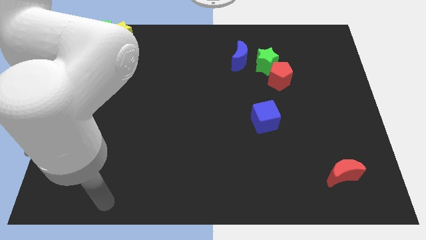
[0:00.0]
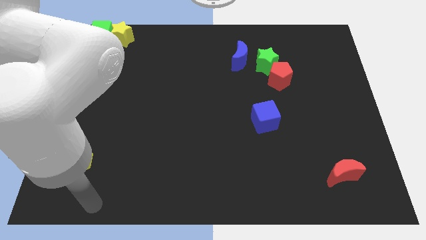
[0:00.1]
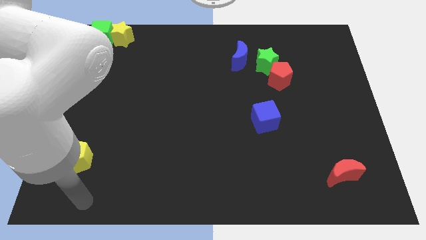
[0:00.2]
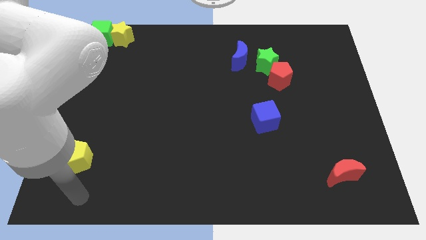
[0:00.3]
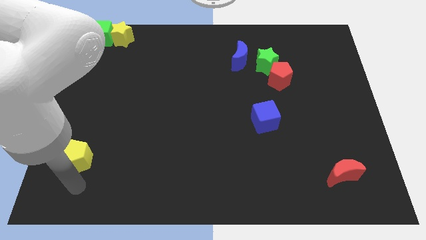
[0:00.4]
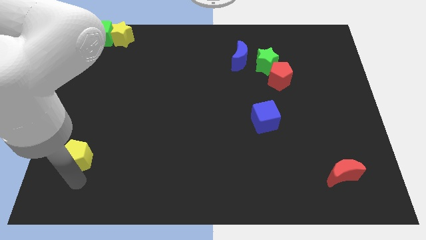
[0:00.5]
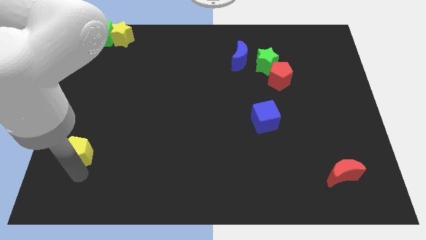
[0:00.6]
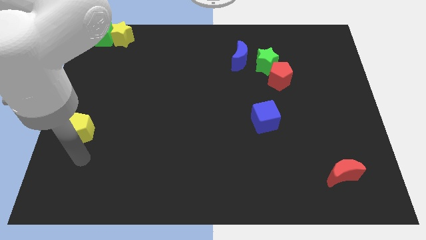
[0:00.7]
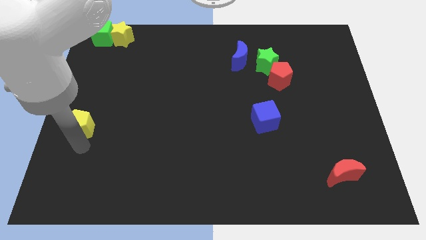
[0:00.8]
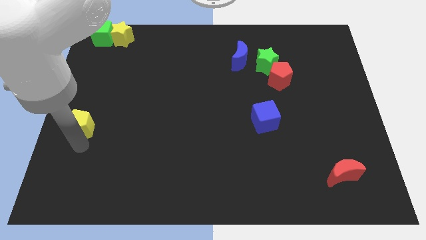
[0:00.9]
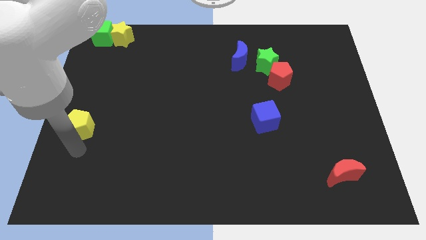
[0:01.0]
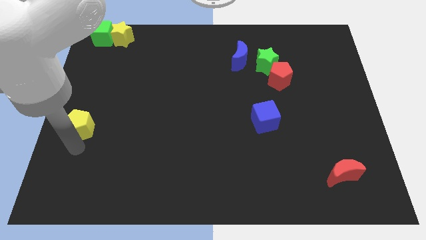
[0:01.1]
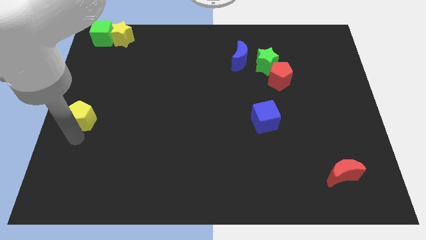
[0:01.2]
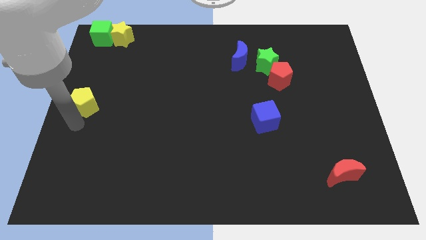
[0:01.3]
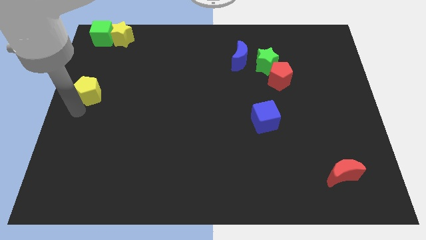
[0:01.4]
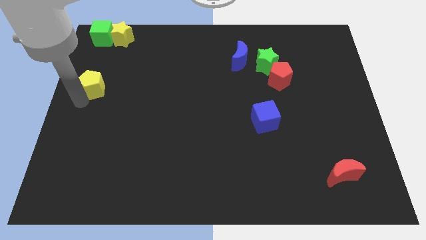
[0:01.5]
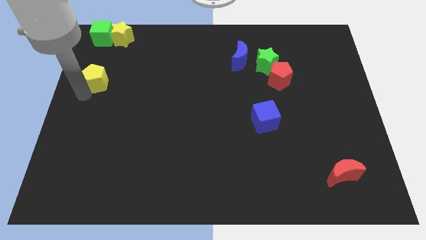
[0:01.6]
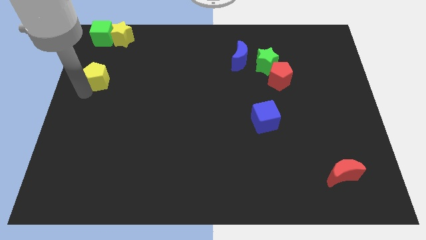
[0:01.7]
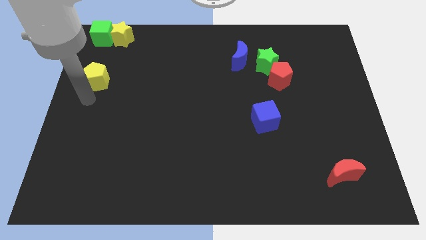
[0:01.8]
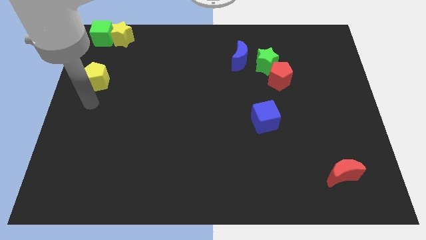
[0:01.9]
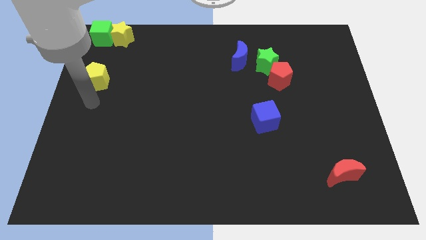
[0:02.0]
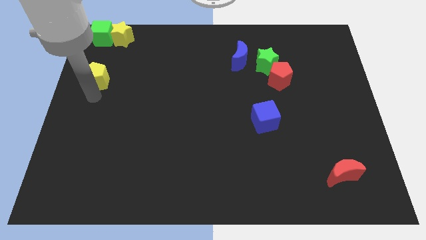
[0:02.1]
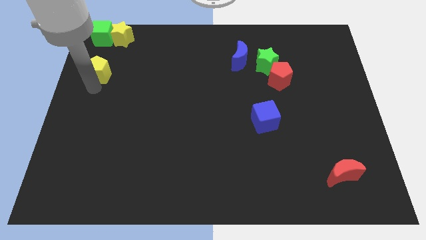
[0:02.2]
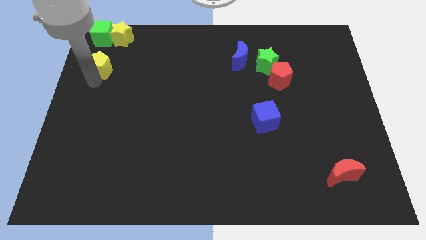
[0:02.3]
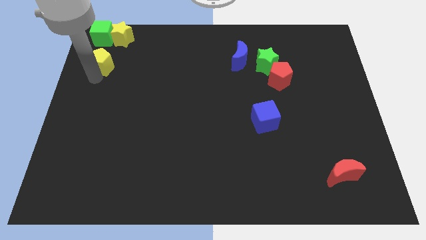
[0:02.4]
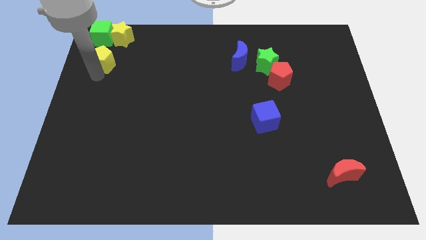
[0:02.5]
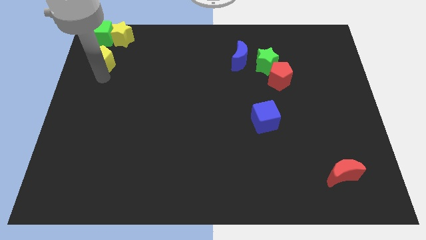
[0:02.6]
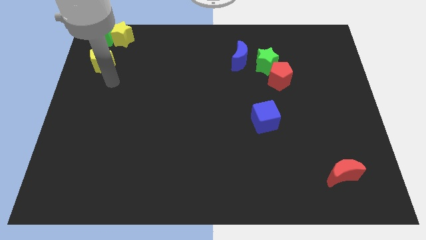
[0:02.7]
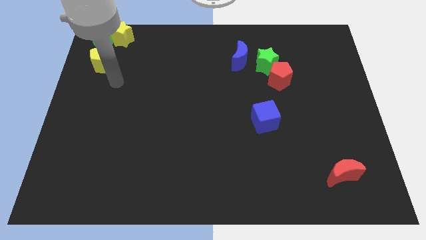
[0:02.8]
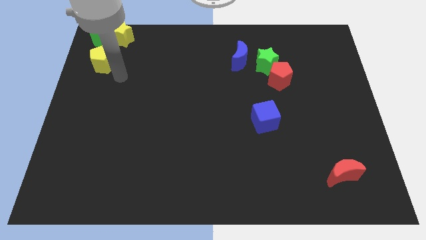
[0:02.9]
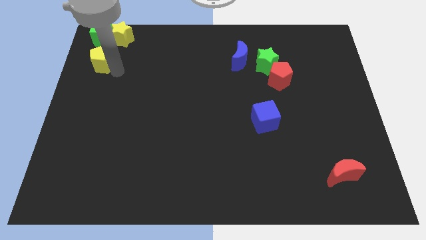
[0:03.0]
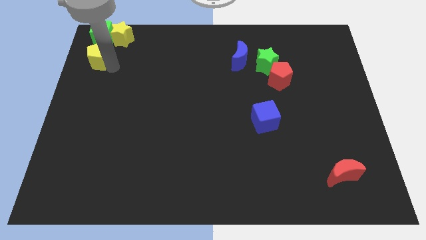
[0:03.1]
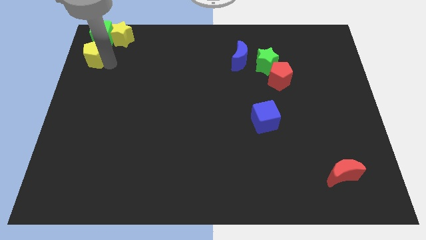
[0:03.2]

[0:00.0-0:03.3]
place yellow pentagon below green cube

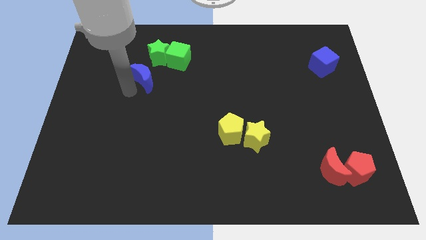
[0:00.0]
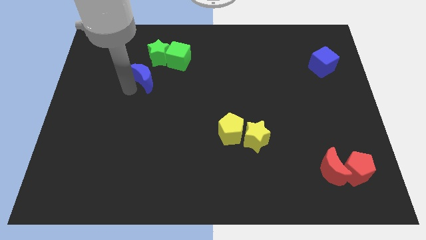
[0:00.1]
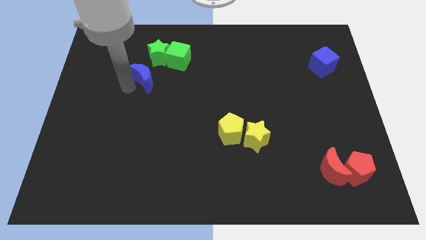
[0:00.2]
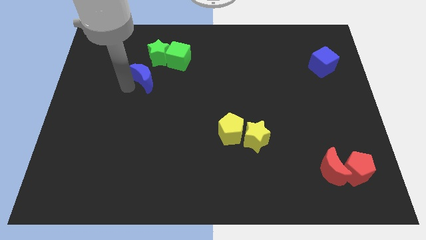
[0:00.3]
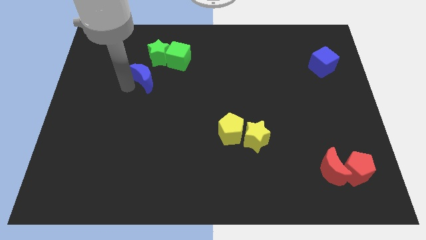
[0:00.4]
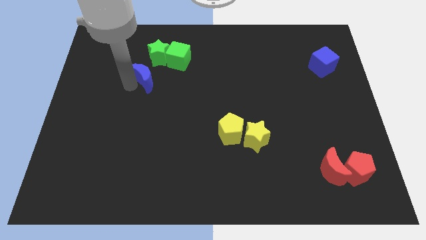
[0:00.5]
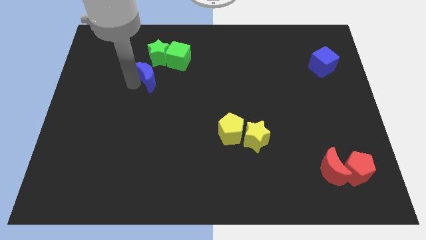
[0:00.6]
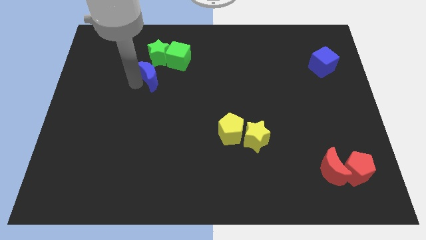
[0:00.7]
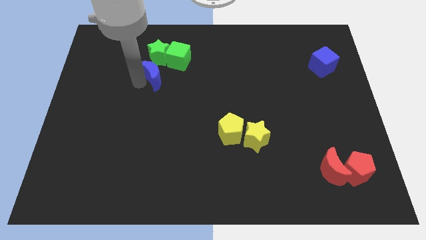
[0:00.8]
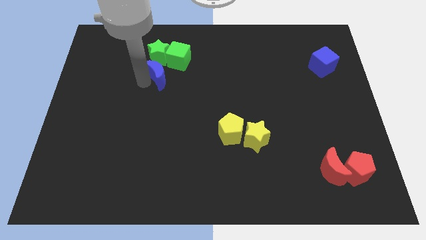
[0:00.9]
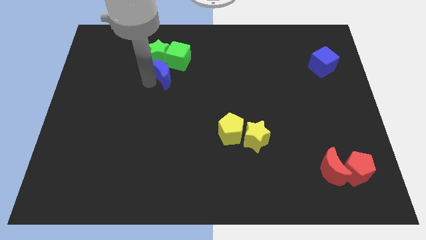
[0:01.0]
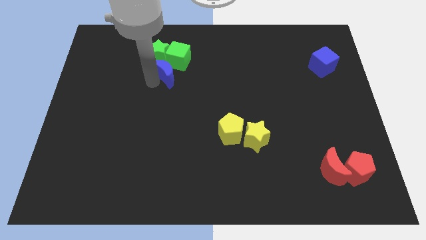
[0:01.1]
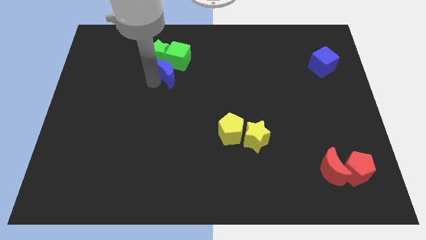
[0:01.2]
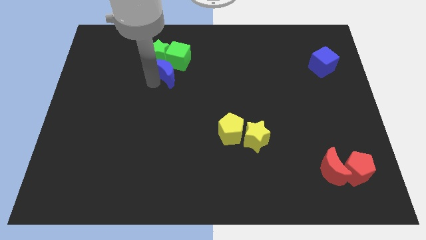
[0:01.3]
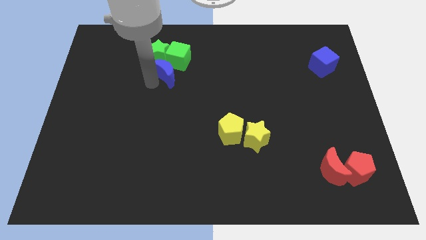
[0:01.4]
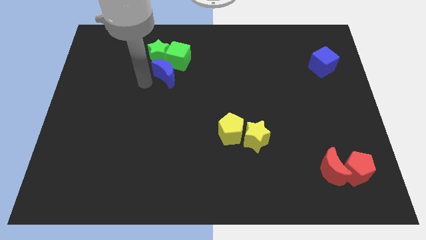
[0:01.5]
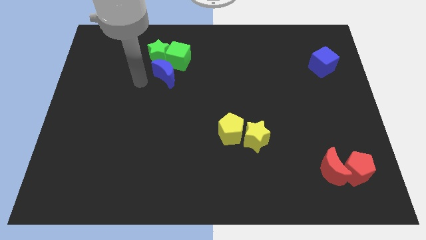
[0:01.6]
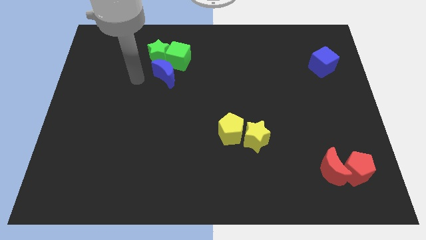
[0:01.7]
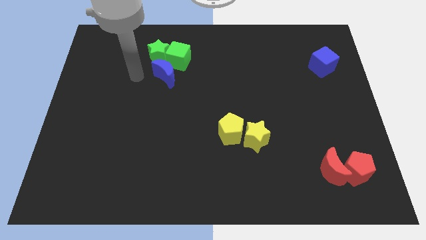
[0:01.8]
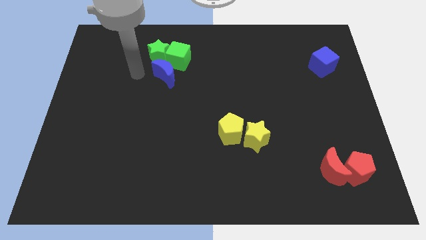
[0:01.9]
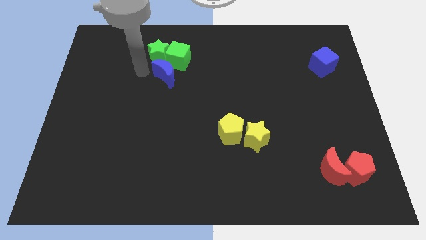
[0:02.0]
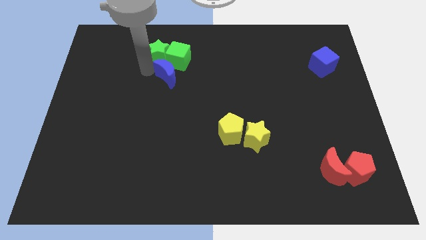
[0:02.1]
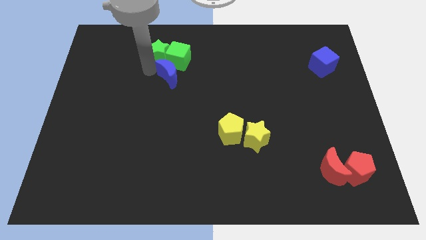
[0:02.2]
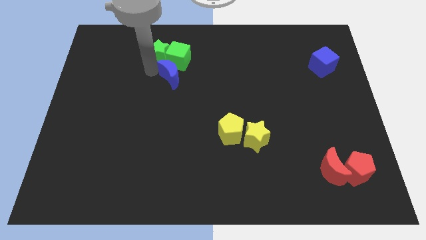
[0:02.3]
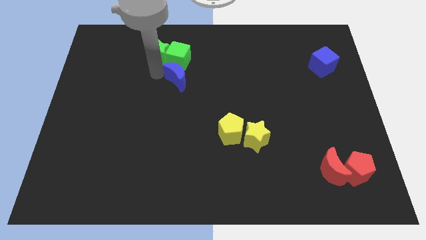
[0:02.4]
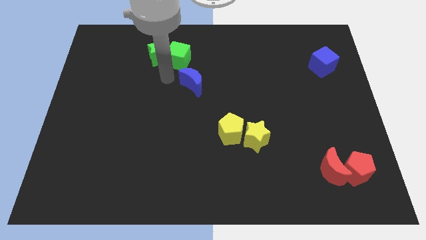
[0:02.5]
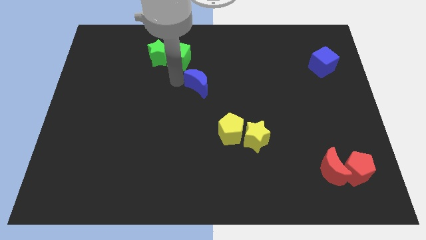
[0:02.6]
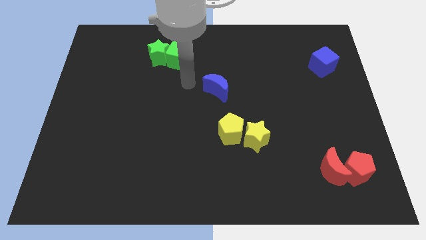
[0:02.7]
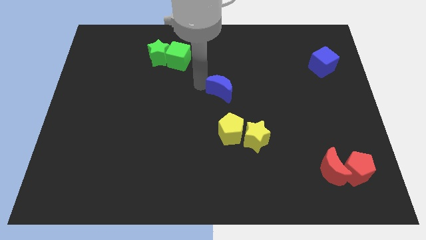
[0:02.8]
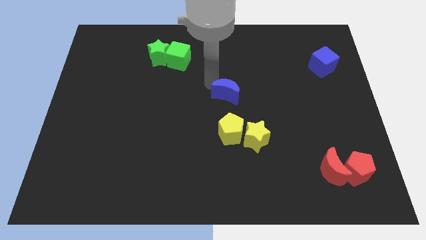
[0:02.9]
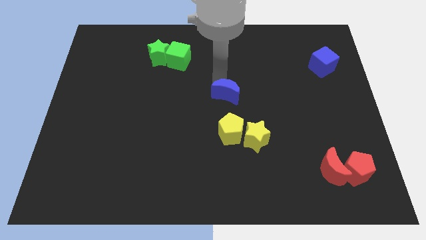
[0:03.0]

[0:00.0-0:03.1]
push the blue crescent to the top side of the yellow pentagon

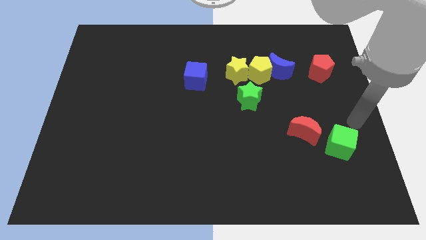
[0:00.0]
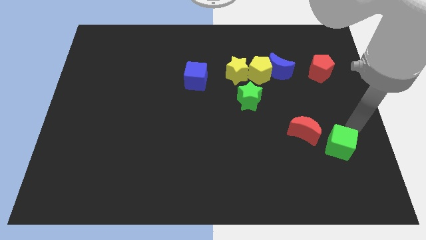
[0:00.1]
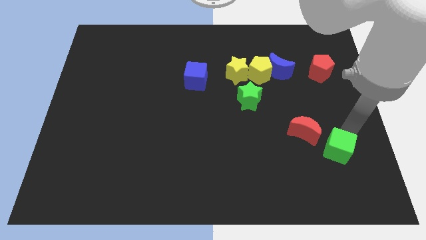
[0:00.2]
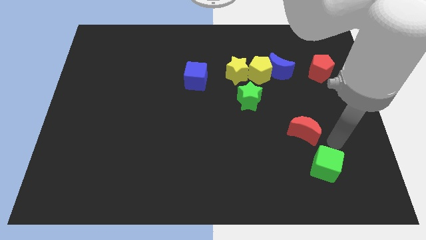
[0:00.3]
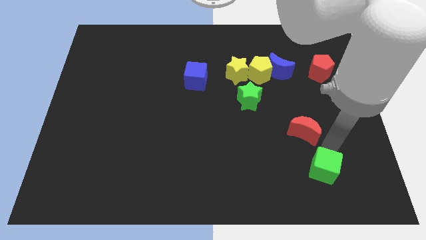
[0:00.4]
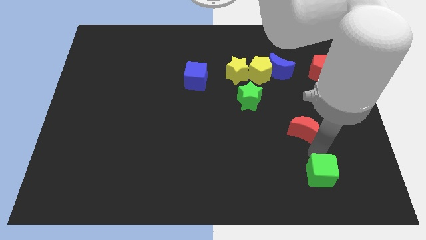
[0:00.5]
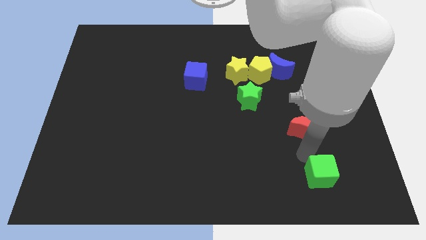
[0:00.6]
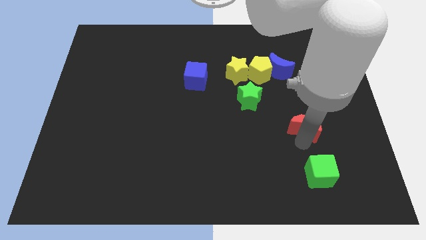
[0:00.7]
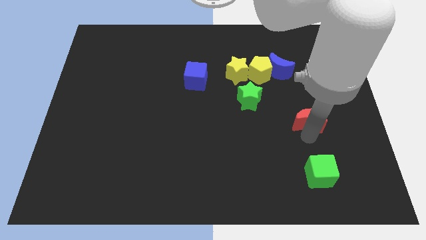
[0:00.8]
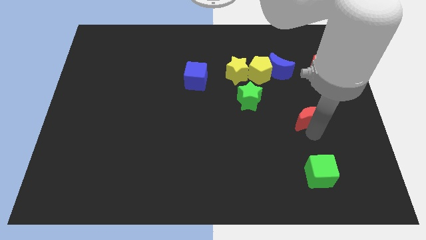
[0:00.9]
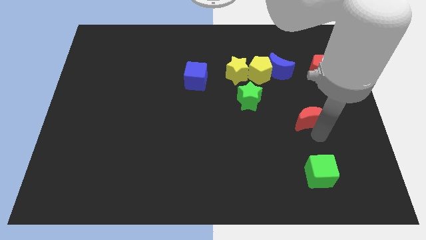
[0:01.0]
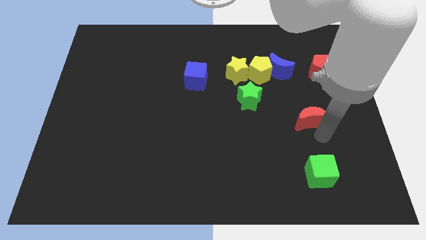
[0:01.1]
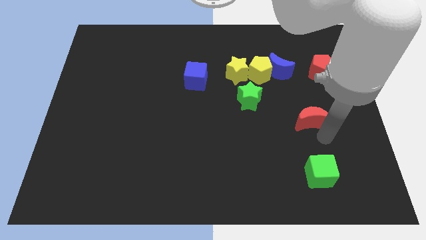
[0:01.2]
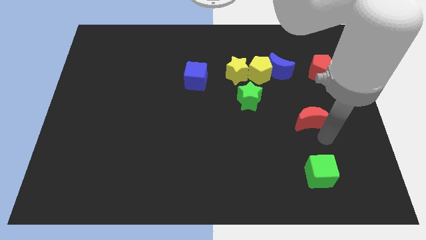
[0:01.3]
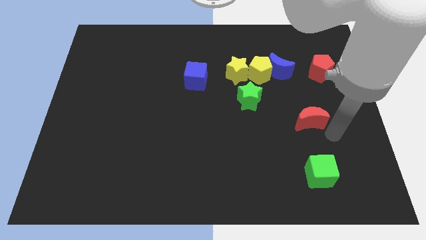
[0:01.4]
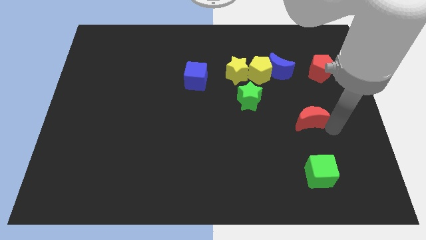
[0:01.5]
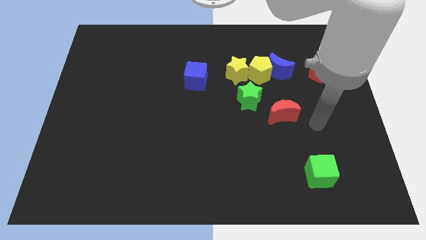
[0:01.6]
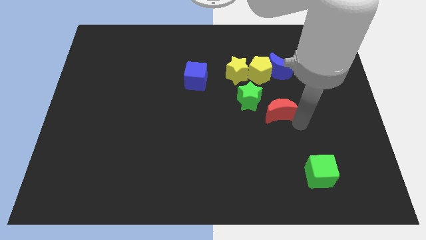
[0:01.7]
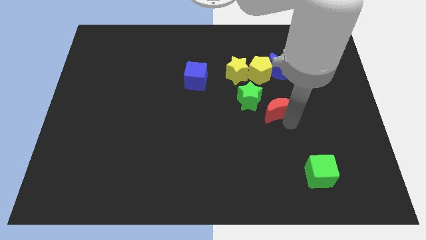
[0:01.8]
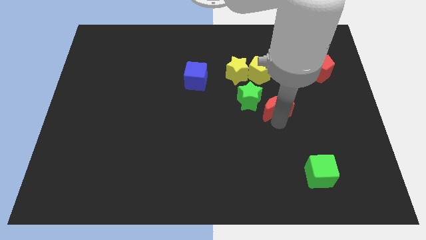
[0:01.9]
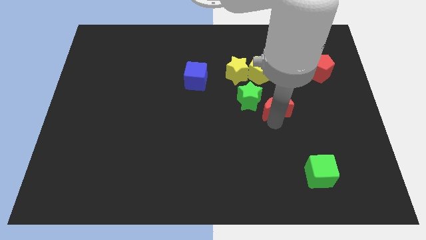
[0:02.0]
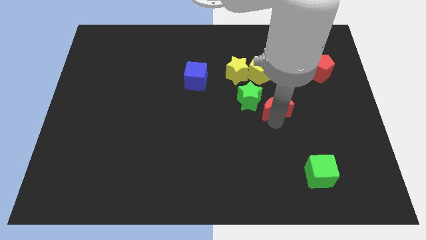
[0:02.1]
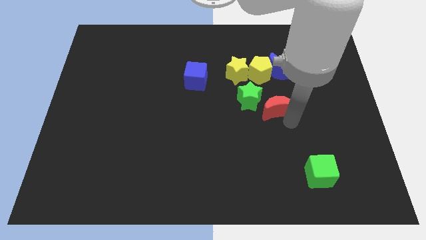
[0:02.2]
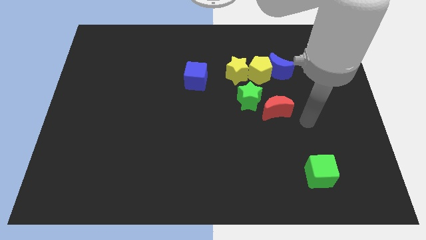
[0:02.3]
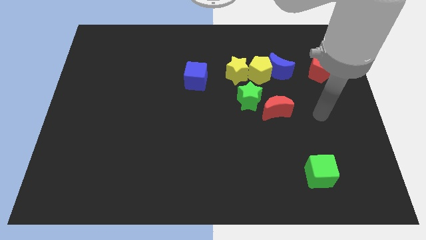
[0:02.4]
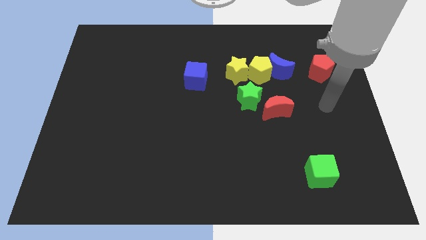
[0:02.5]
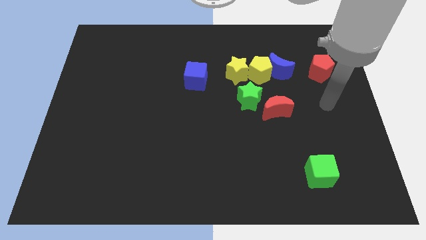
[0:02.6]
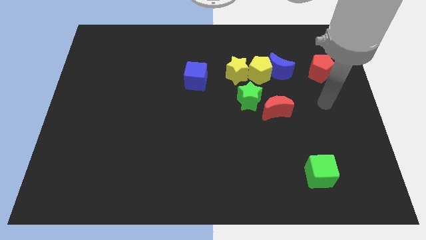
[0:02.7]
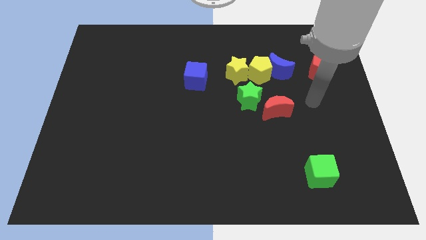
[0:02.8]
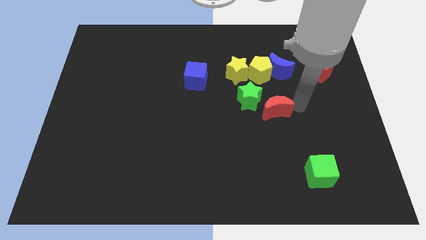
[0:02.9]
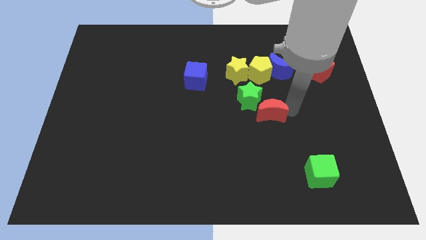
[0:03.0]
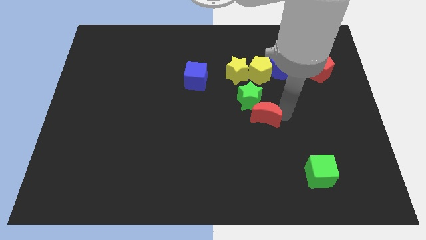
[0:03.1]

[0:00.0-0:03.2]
drag the red moon towards the green star
